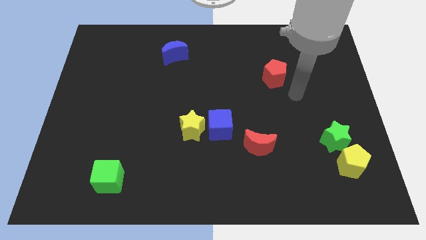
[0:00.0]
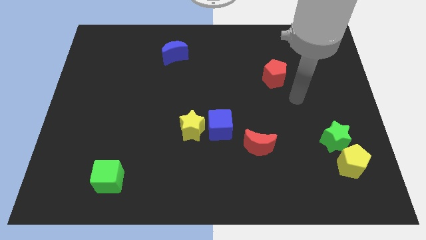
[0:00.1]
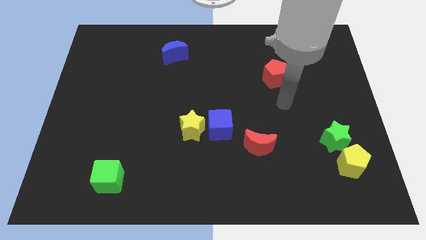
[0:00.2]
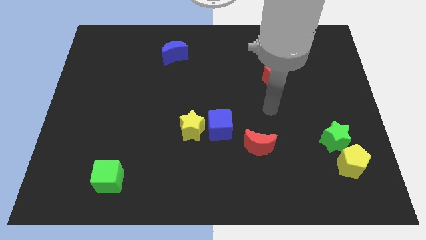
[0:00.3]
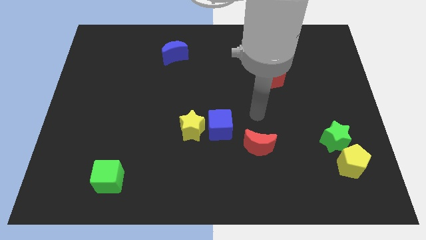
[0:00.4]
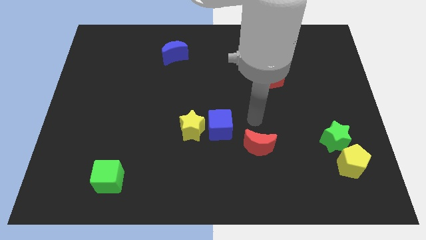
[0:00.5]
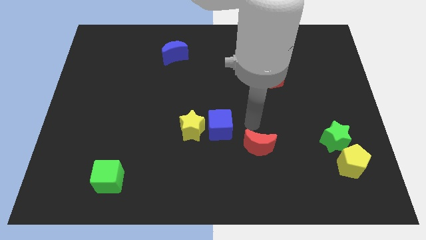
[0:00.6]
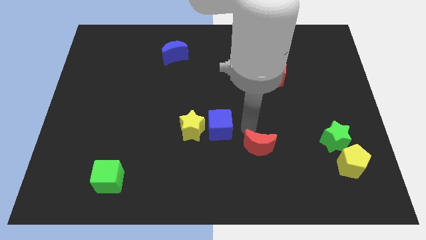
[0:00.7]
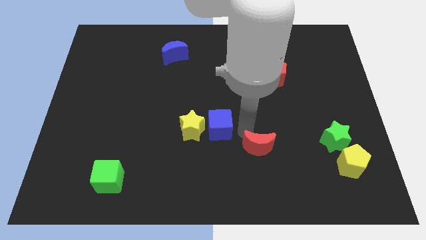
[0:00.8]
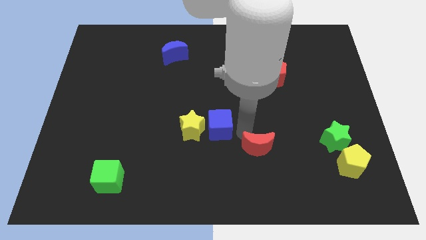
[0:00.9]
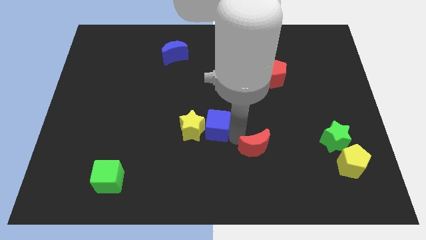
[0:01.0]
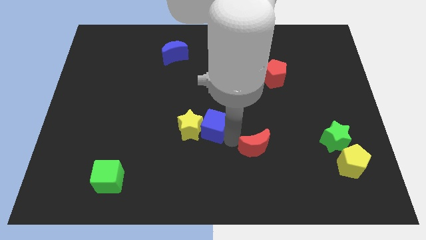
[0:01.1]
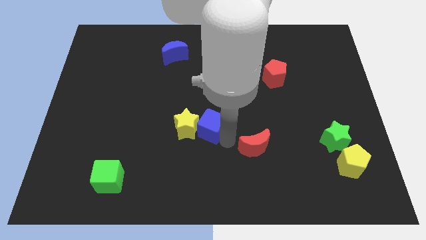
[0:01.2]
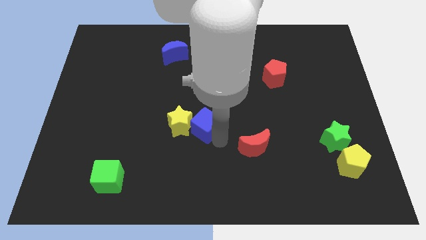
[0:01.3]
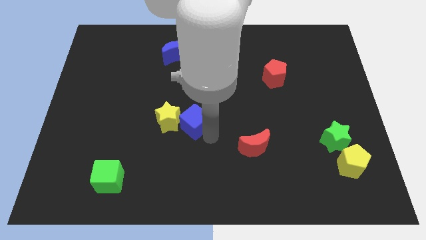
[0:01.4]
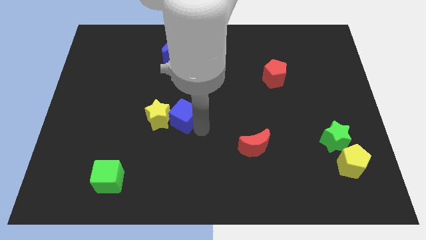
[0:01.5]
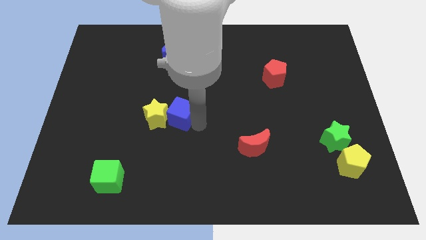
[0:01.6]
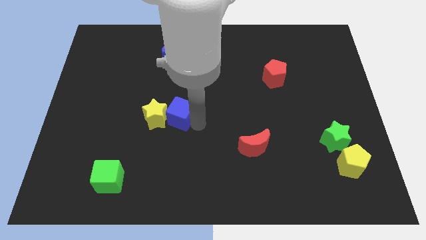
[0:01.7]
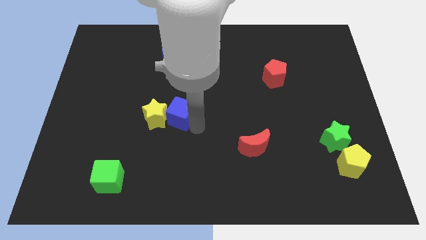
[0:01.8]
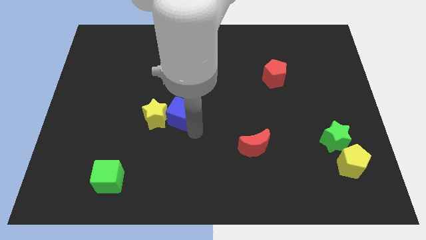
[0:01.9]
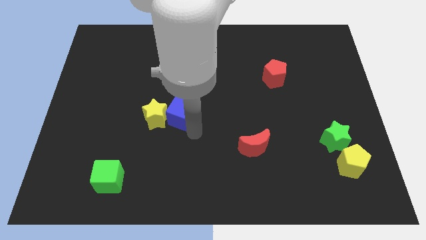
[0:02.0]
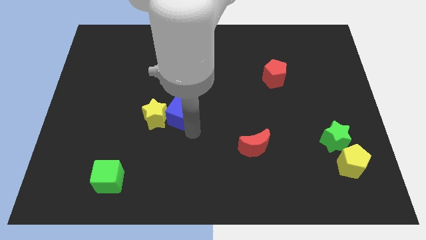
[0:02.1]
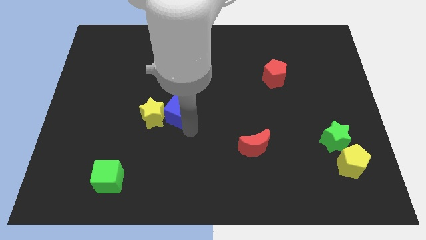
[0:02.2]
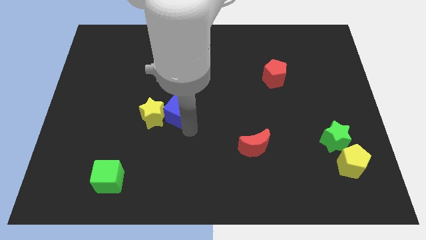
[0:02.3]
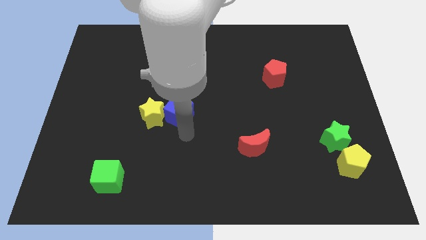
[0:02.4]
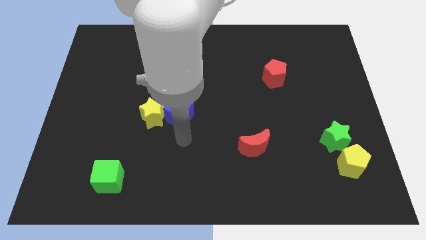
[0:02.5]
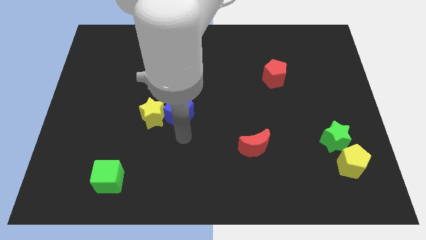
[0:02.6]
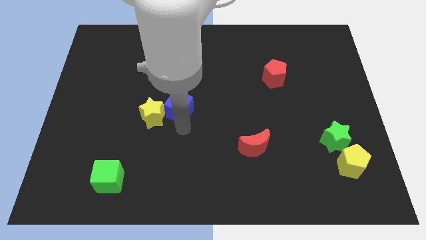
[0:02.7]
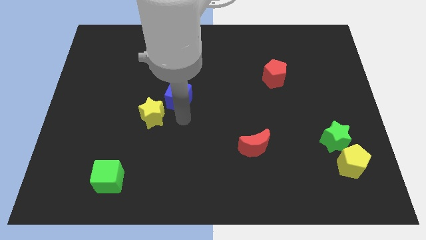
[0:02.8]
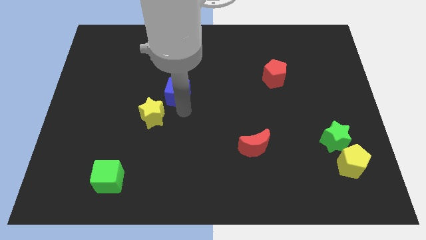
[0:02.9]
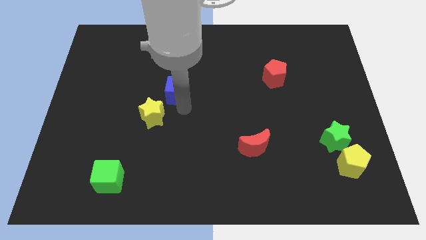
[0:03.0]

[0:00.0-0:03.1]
push blue cube and yellow star slightly to the left

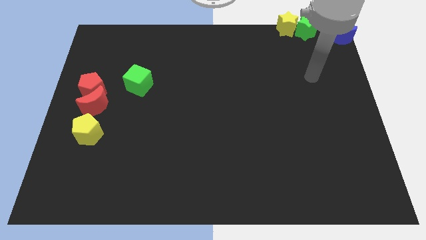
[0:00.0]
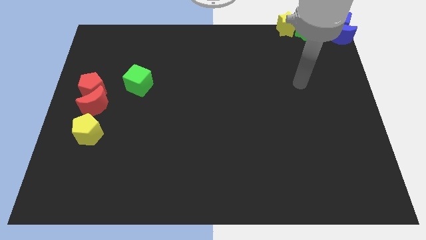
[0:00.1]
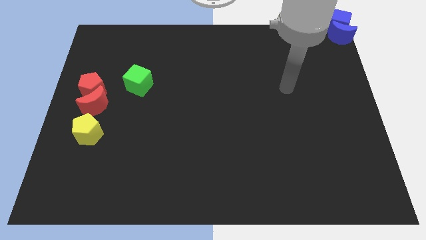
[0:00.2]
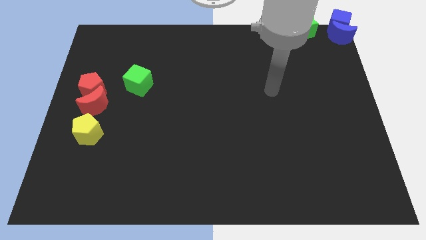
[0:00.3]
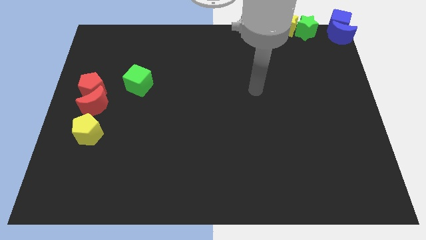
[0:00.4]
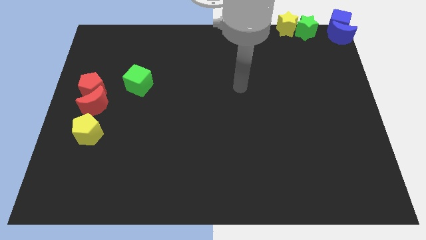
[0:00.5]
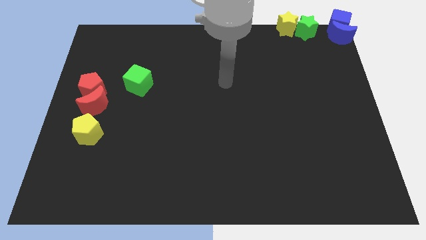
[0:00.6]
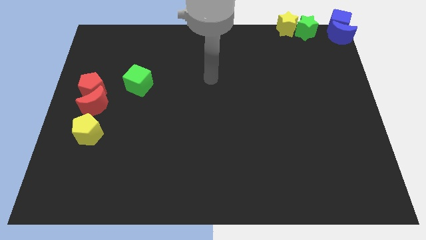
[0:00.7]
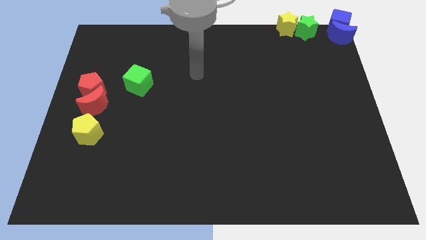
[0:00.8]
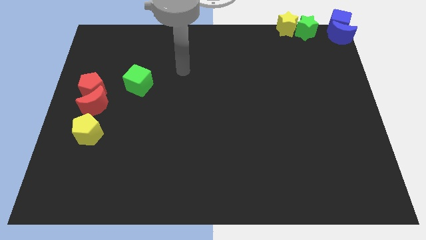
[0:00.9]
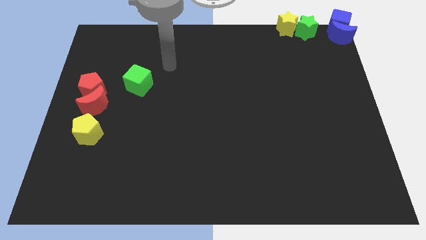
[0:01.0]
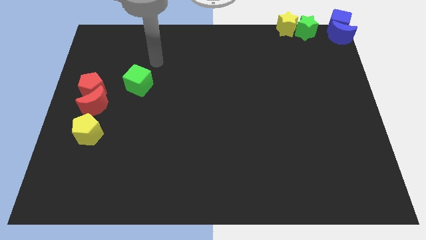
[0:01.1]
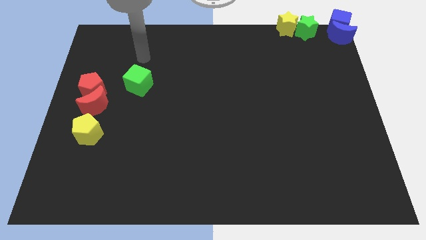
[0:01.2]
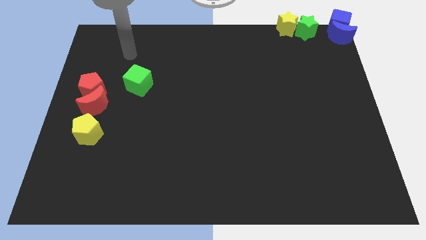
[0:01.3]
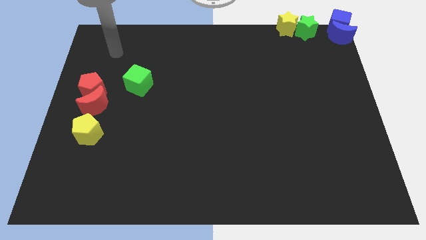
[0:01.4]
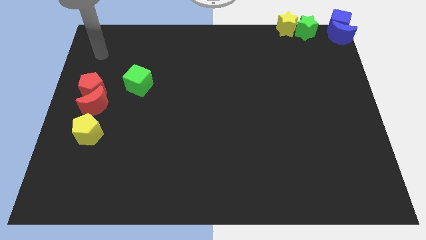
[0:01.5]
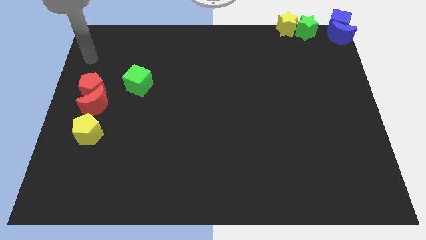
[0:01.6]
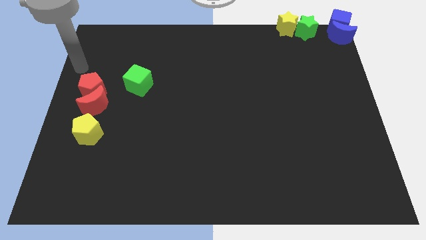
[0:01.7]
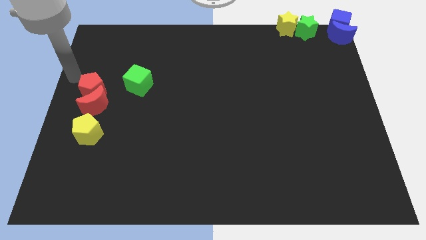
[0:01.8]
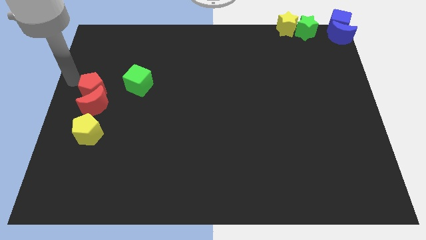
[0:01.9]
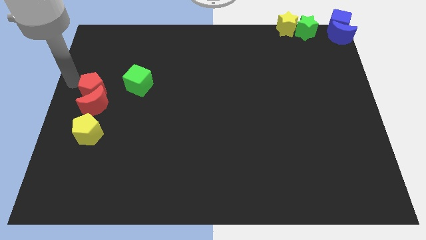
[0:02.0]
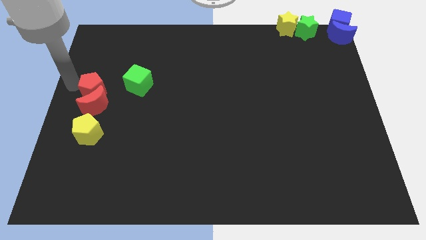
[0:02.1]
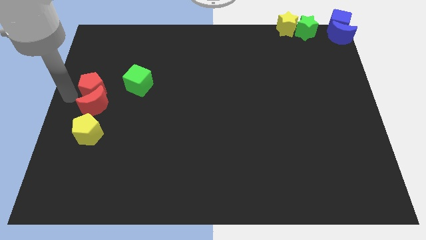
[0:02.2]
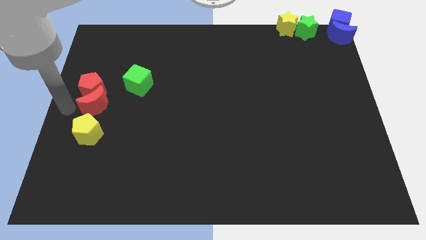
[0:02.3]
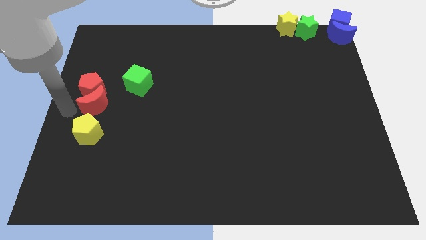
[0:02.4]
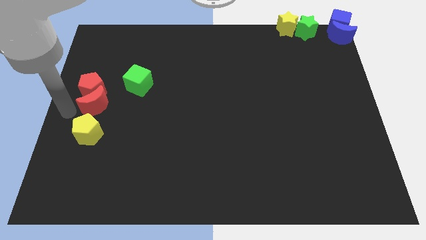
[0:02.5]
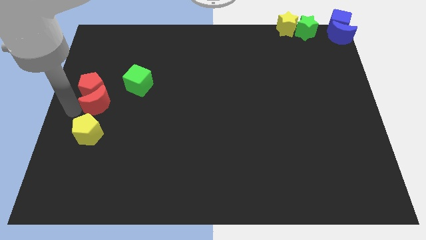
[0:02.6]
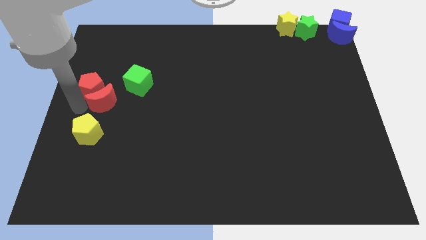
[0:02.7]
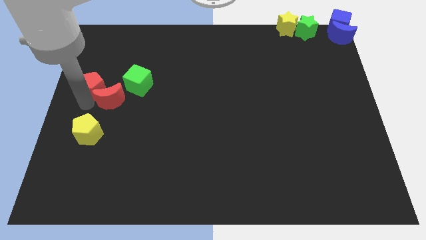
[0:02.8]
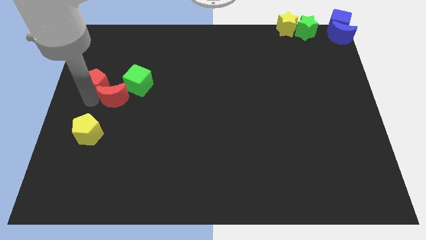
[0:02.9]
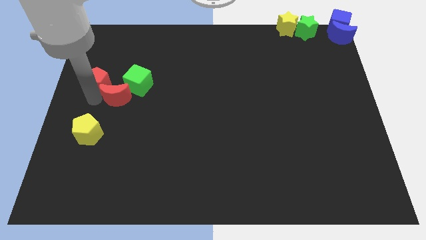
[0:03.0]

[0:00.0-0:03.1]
place the red crescent ahead middle to the green cube and red pentagon

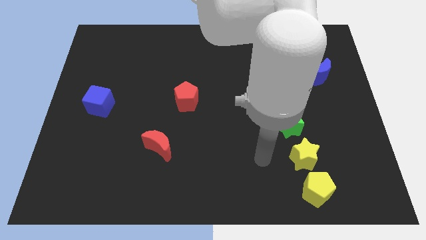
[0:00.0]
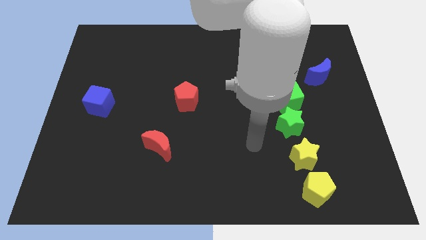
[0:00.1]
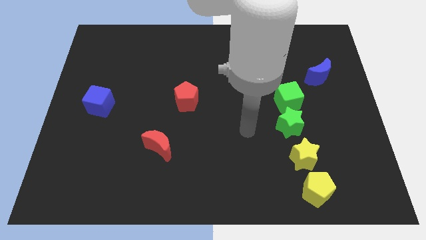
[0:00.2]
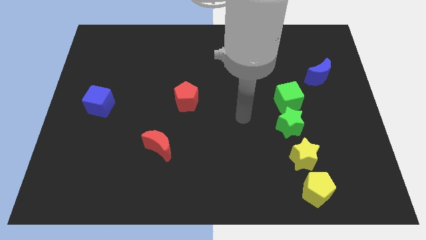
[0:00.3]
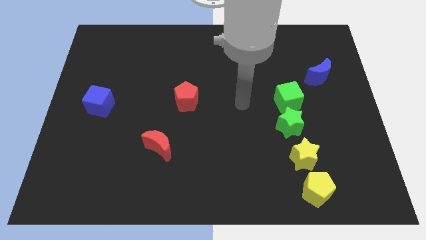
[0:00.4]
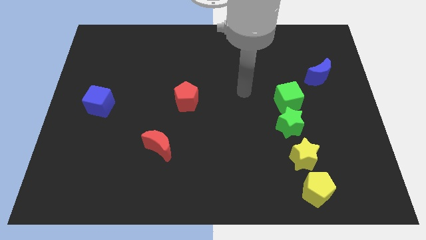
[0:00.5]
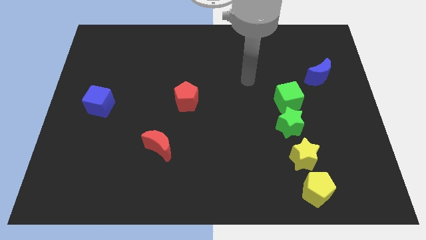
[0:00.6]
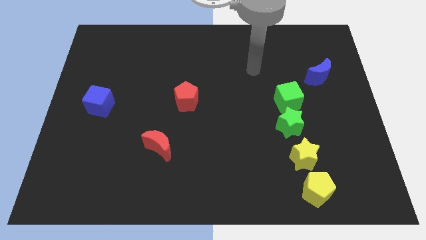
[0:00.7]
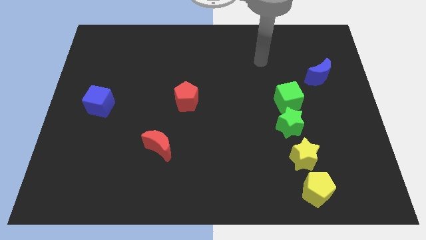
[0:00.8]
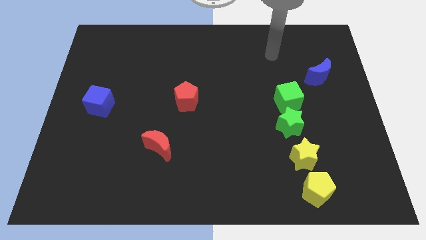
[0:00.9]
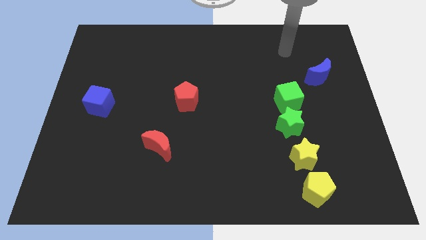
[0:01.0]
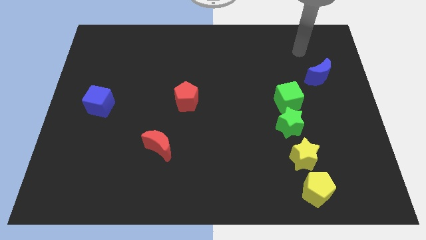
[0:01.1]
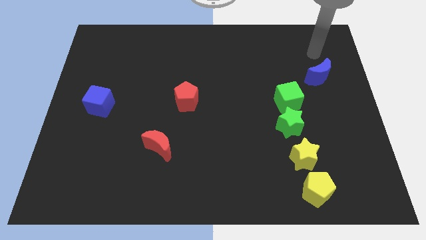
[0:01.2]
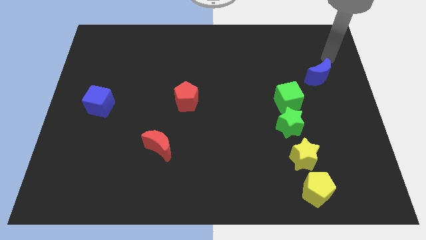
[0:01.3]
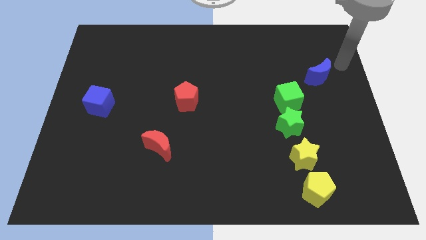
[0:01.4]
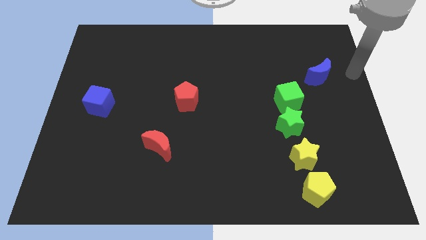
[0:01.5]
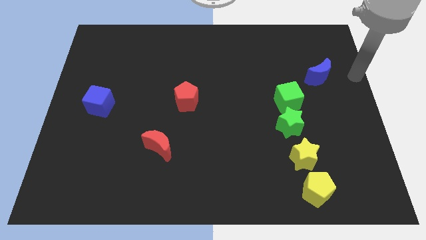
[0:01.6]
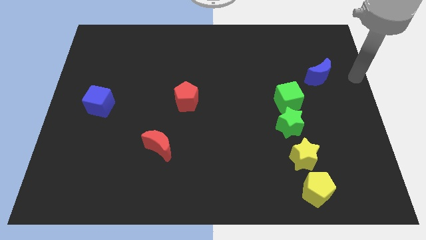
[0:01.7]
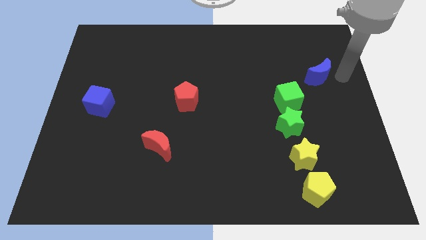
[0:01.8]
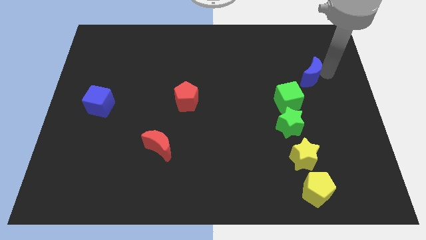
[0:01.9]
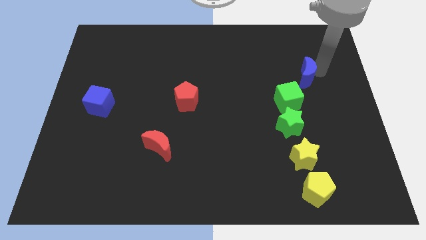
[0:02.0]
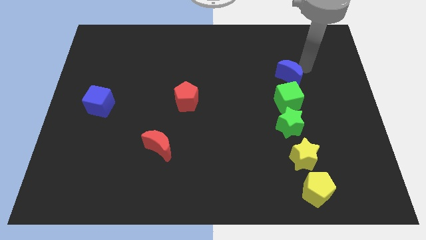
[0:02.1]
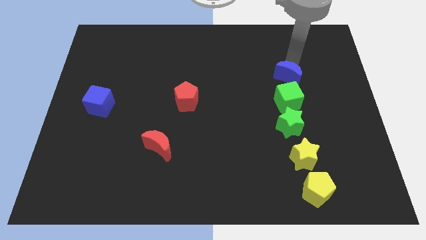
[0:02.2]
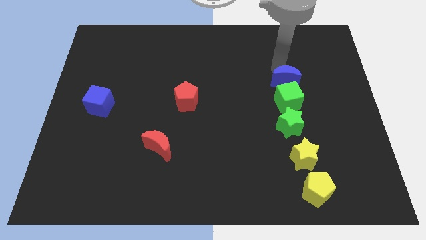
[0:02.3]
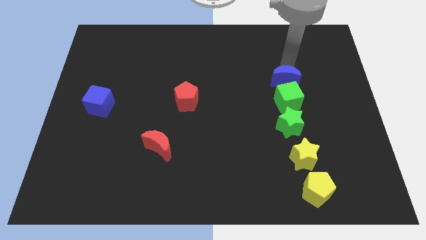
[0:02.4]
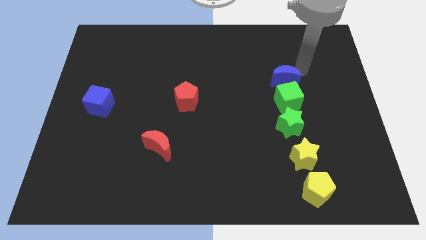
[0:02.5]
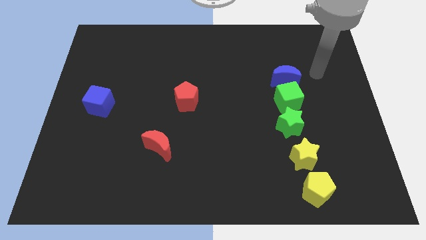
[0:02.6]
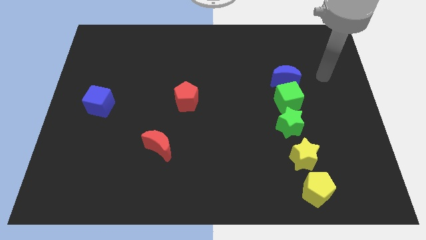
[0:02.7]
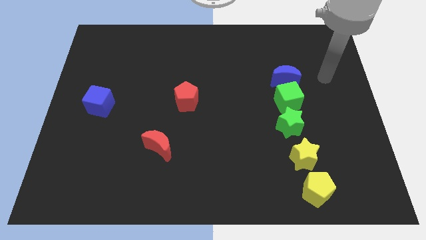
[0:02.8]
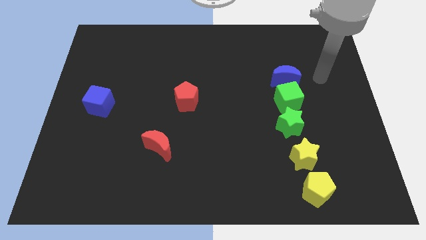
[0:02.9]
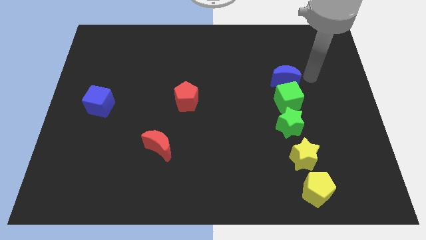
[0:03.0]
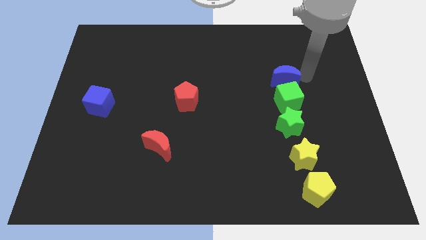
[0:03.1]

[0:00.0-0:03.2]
push the blue moon to the top side of the green cube
